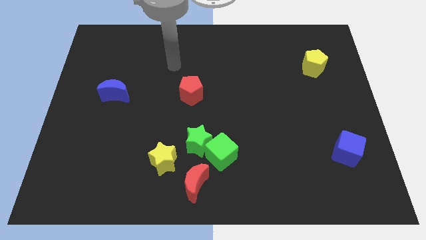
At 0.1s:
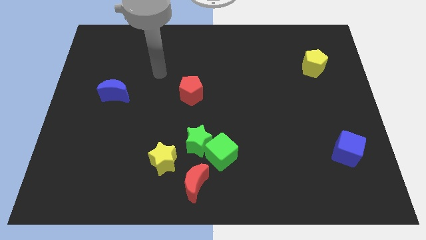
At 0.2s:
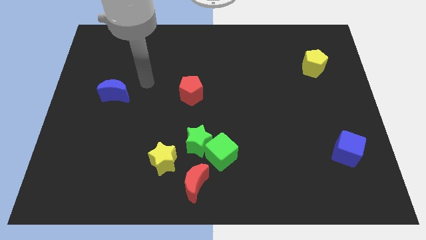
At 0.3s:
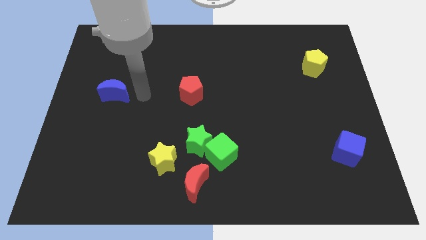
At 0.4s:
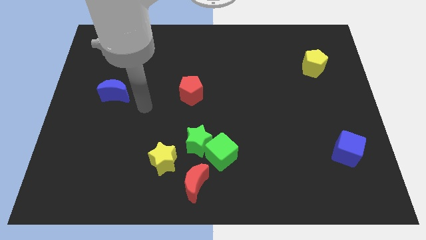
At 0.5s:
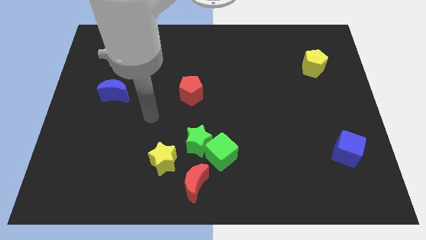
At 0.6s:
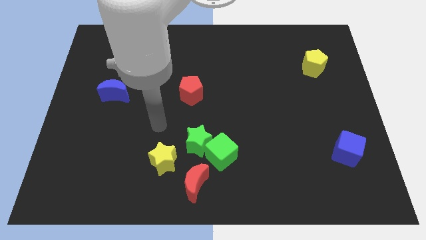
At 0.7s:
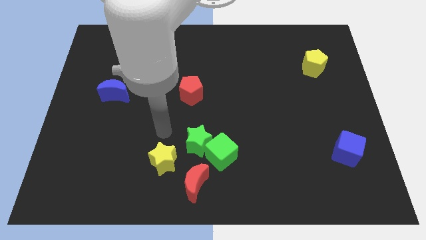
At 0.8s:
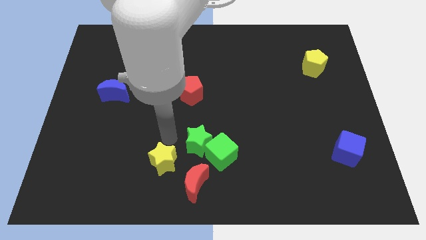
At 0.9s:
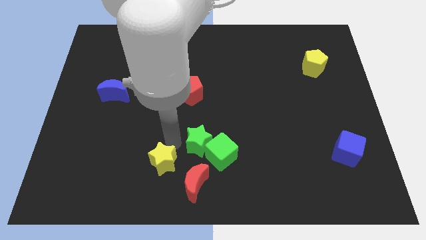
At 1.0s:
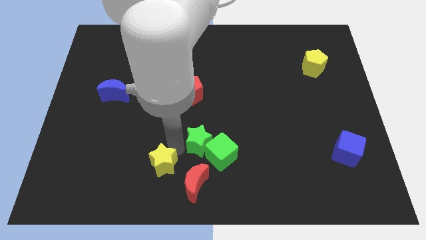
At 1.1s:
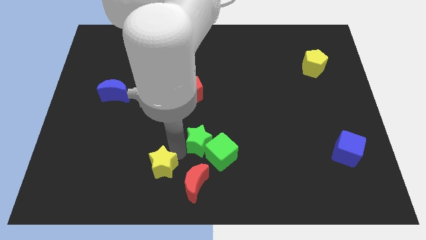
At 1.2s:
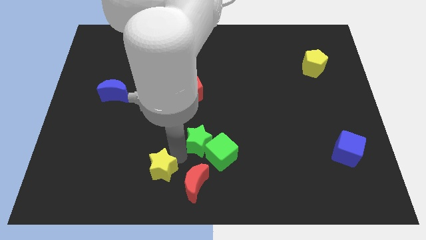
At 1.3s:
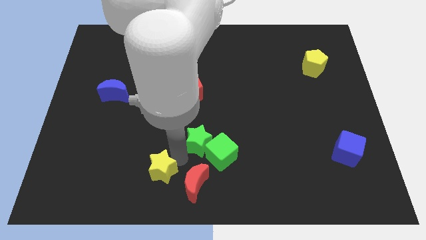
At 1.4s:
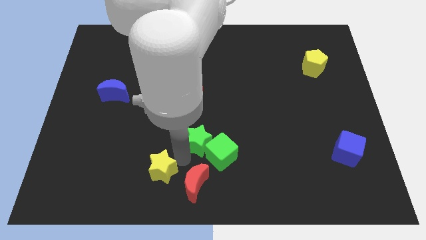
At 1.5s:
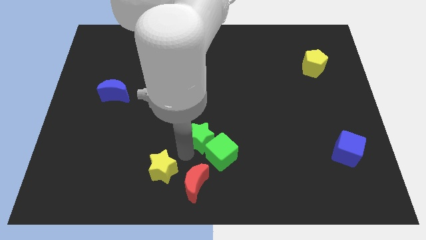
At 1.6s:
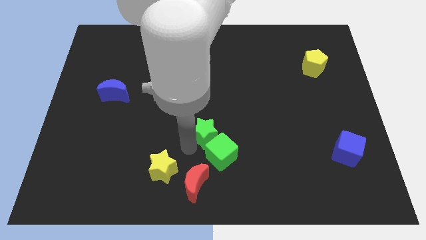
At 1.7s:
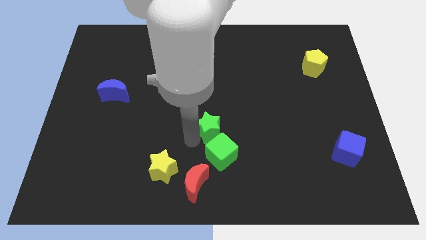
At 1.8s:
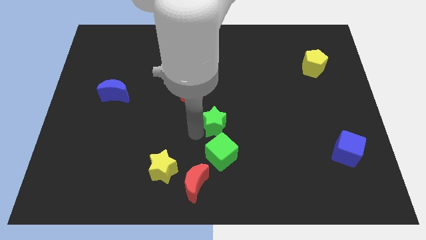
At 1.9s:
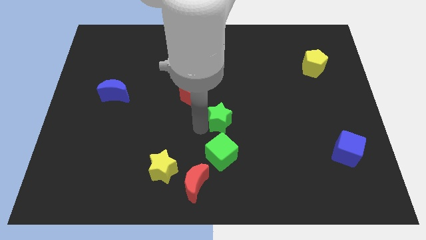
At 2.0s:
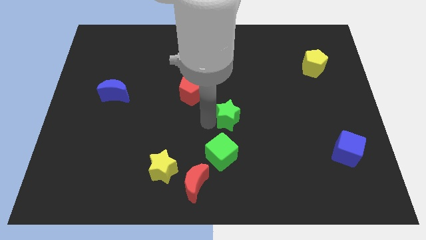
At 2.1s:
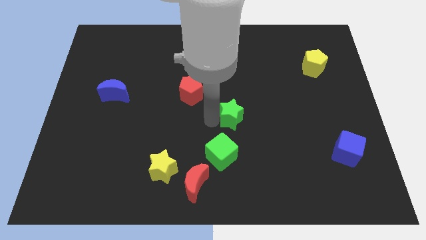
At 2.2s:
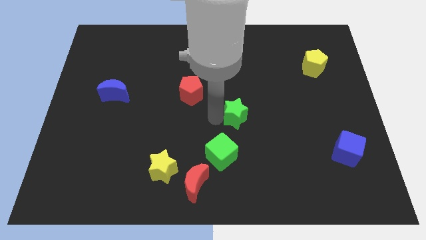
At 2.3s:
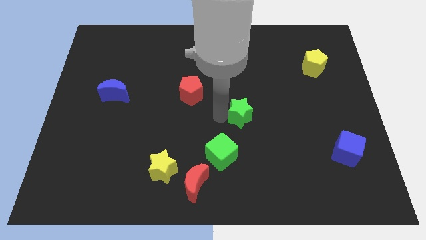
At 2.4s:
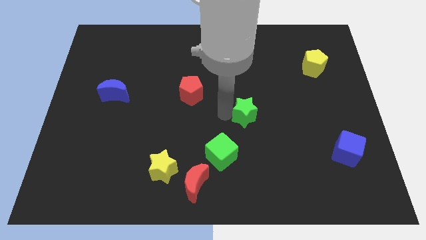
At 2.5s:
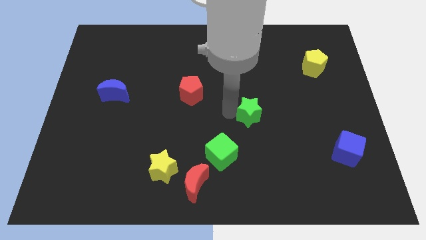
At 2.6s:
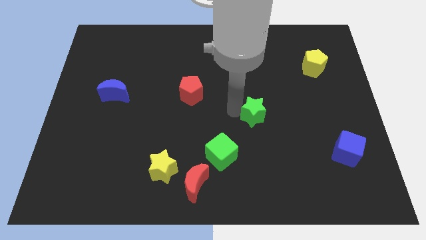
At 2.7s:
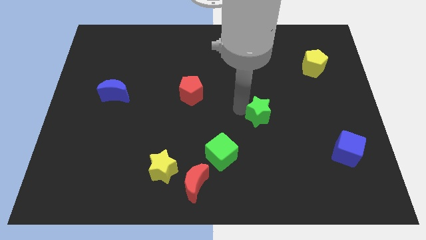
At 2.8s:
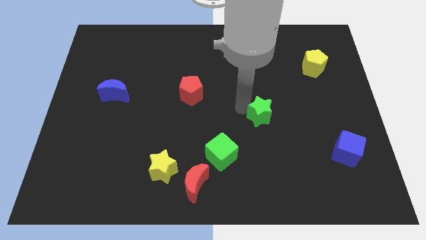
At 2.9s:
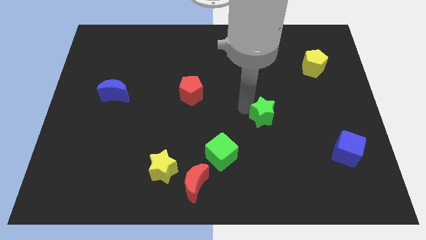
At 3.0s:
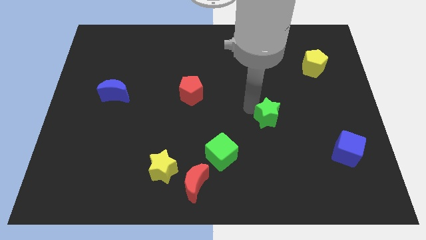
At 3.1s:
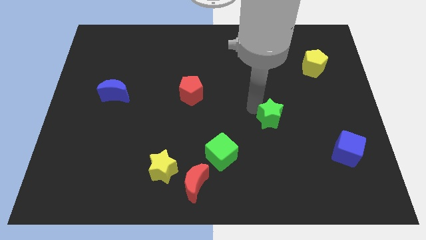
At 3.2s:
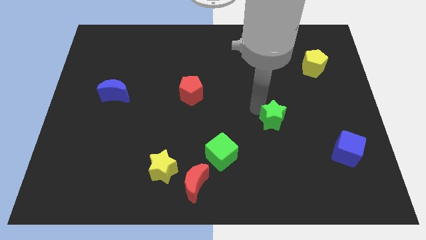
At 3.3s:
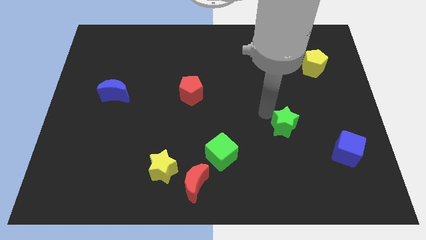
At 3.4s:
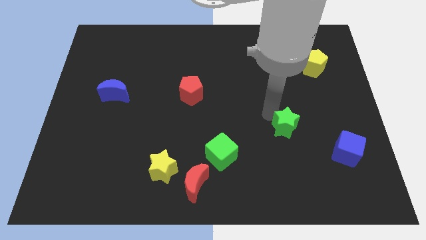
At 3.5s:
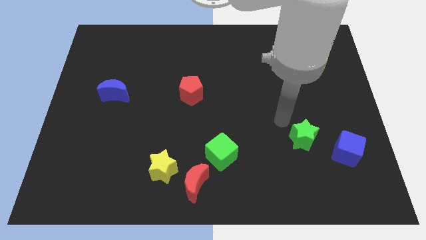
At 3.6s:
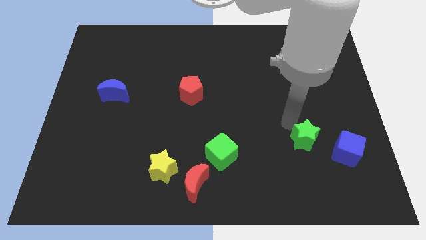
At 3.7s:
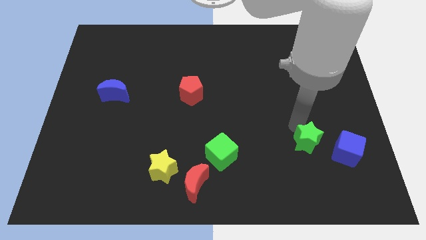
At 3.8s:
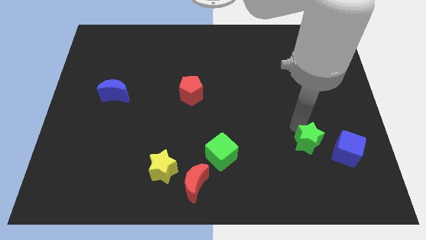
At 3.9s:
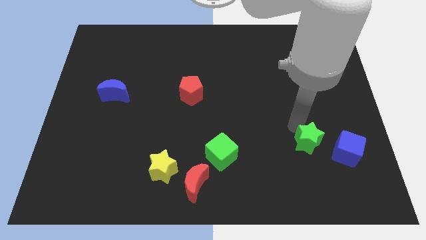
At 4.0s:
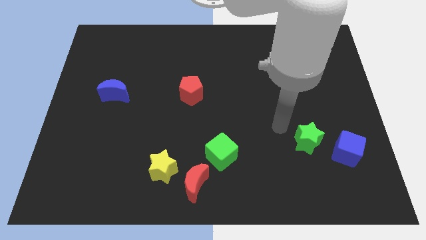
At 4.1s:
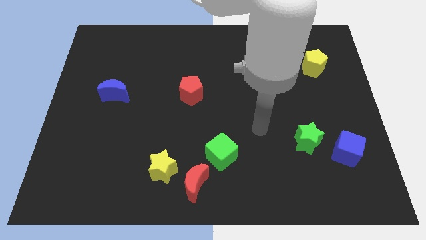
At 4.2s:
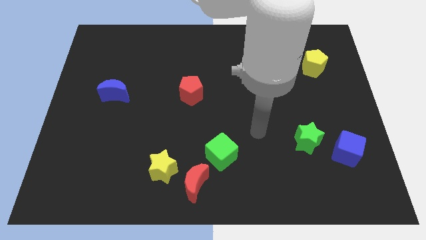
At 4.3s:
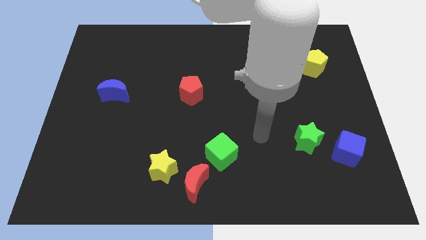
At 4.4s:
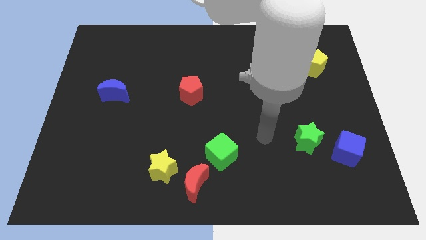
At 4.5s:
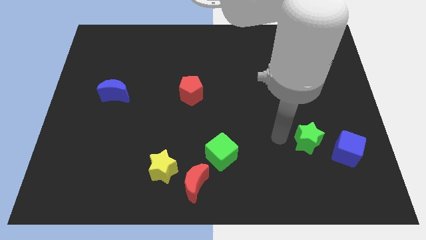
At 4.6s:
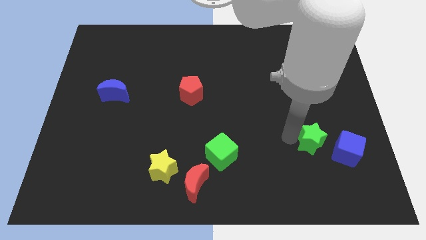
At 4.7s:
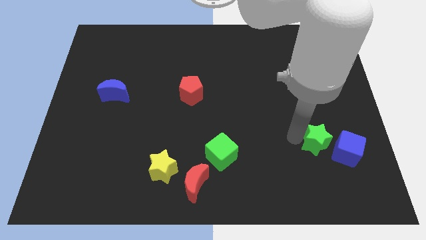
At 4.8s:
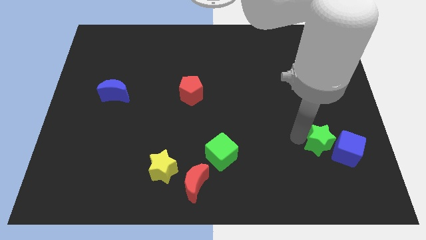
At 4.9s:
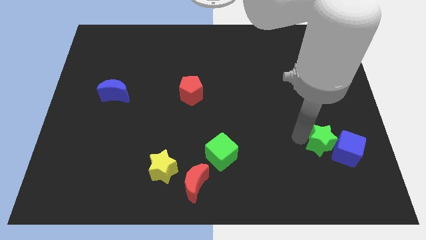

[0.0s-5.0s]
move the green star towards the blue cube

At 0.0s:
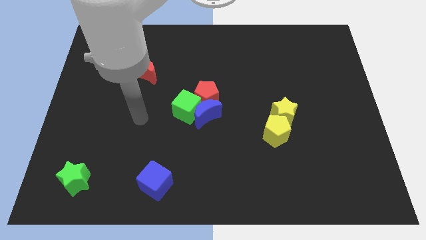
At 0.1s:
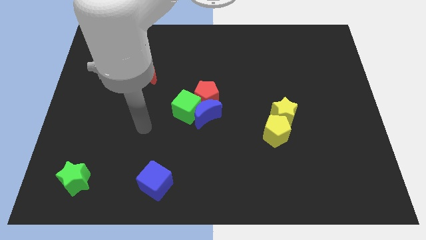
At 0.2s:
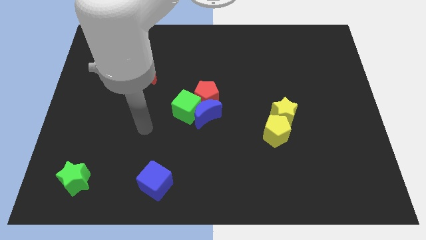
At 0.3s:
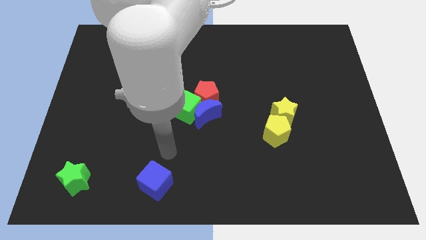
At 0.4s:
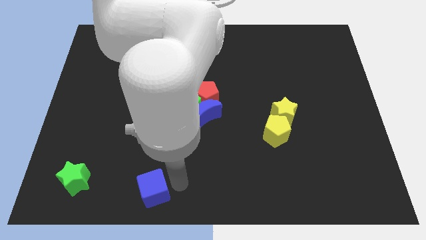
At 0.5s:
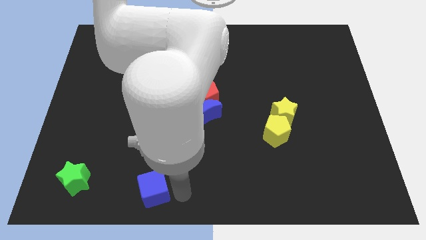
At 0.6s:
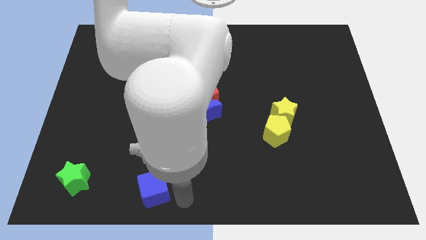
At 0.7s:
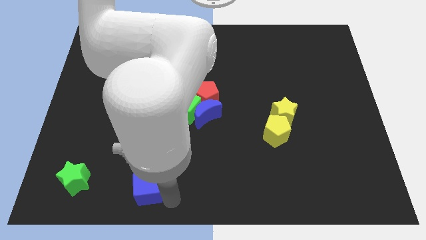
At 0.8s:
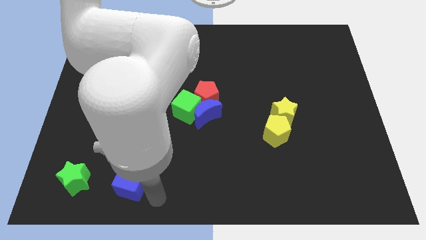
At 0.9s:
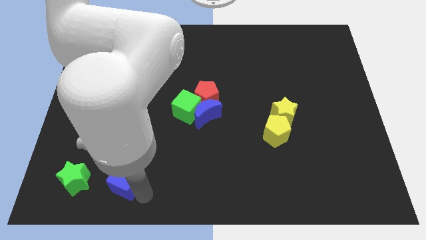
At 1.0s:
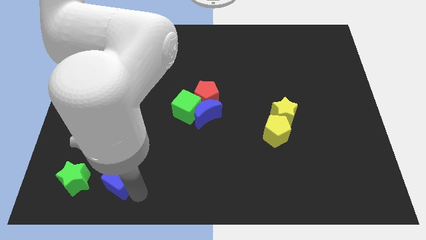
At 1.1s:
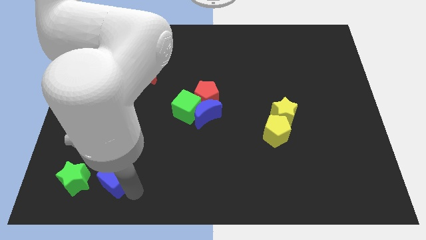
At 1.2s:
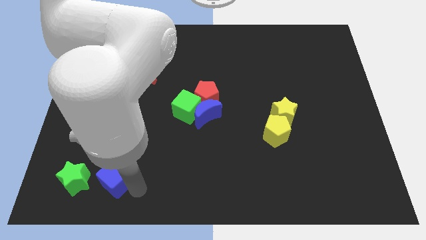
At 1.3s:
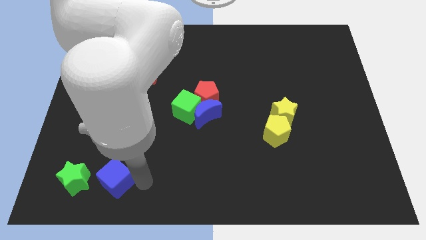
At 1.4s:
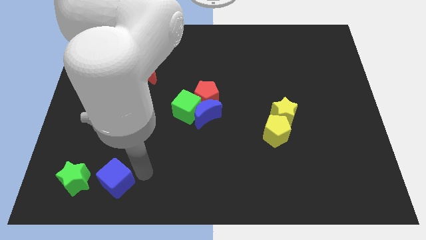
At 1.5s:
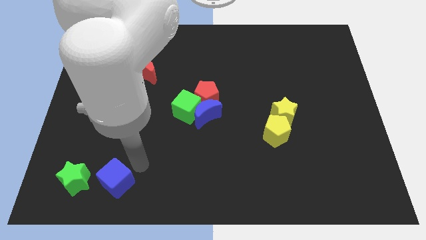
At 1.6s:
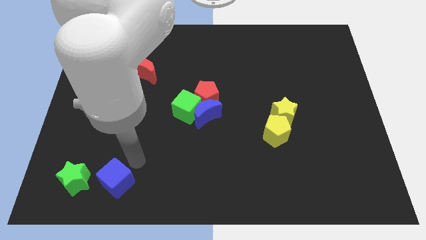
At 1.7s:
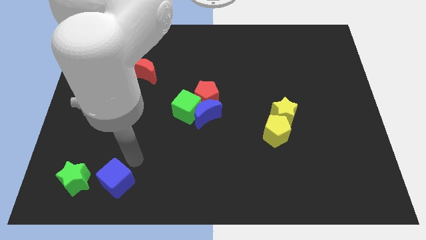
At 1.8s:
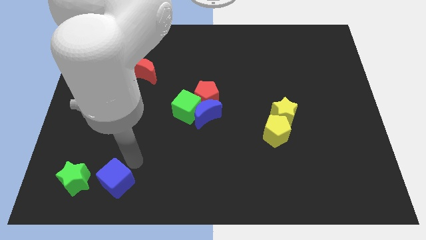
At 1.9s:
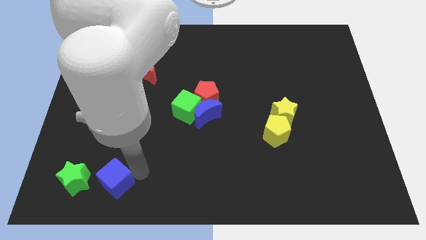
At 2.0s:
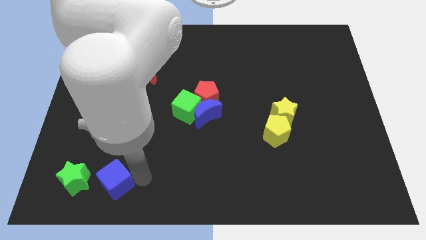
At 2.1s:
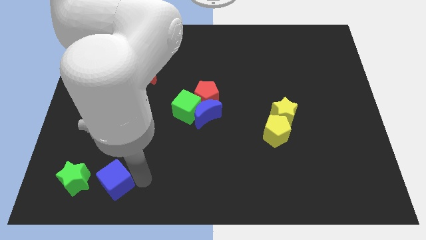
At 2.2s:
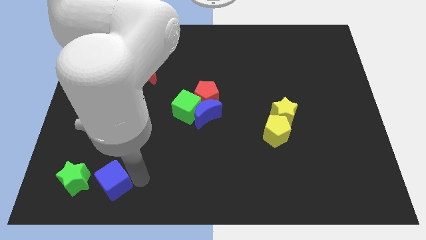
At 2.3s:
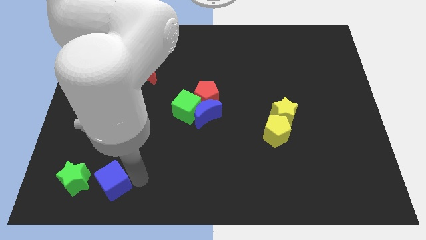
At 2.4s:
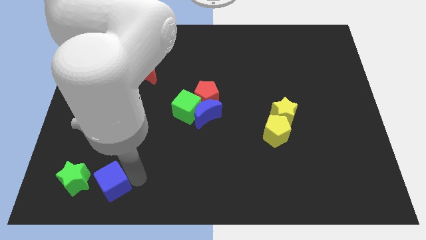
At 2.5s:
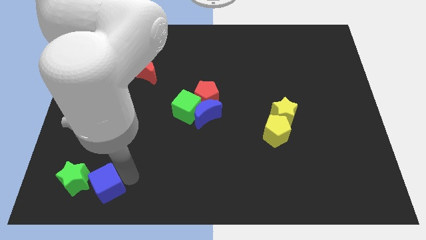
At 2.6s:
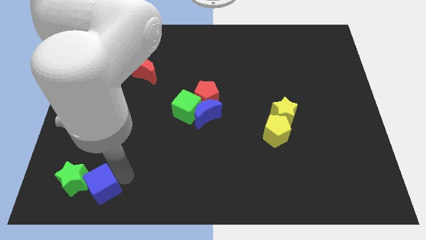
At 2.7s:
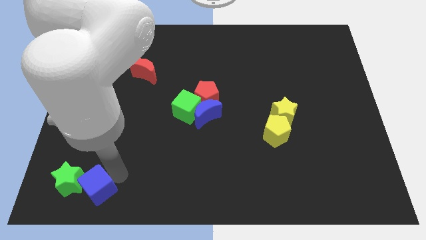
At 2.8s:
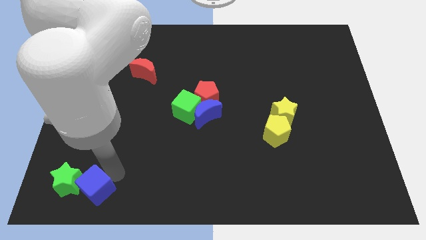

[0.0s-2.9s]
move the blue cube close to the green star

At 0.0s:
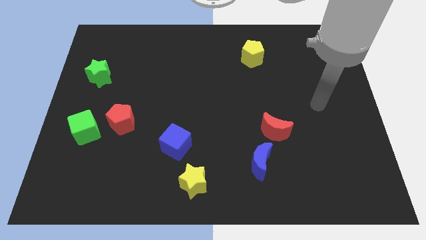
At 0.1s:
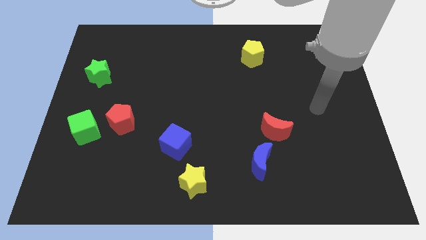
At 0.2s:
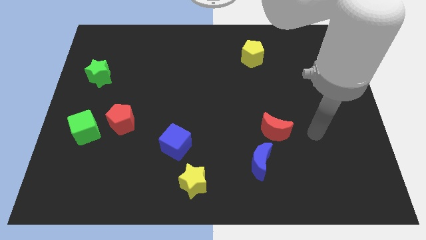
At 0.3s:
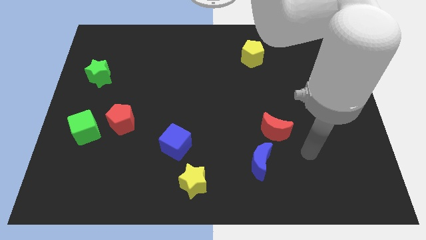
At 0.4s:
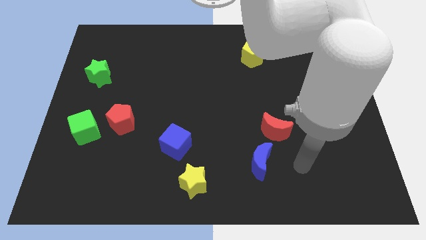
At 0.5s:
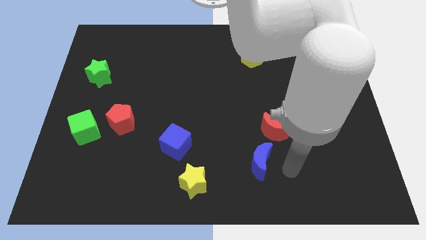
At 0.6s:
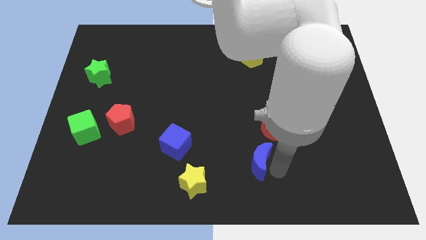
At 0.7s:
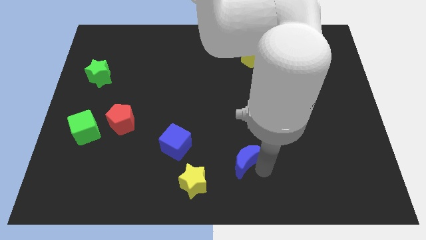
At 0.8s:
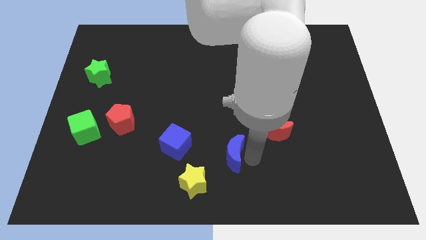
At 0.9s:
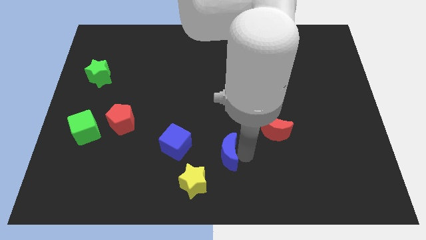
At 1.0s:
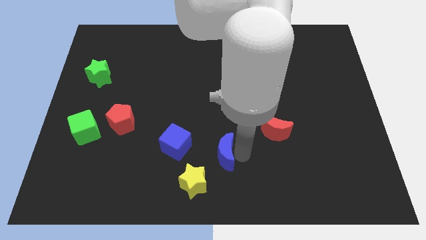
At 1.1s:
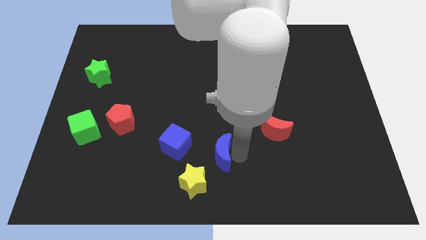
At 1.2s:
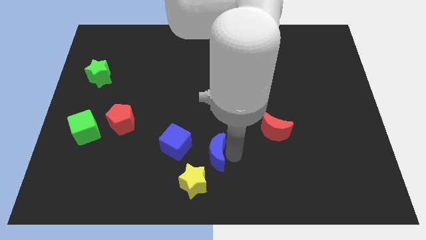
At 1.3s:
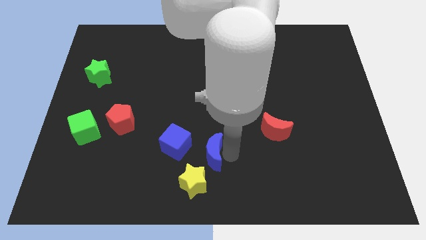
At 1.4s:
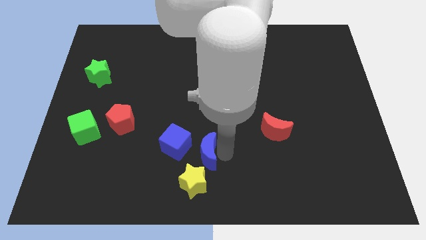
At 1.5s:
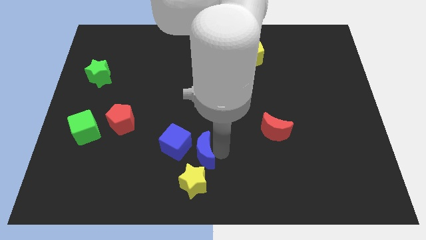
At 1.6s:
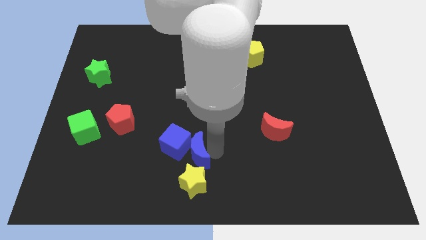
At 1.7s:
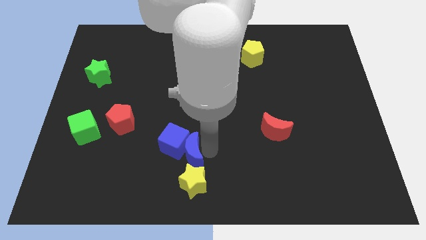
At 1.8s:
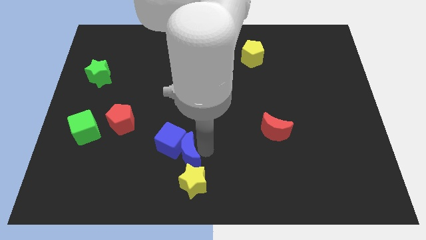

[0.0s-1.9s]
push the blue moon next to the blue cube
